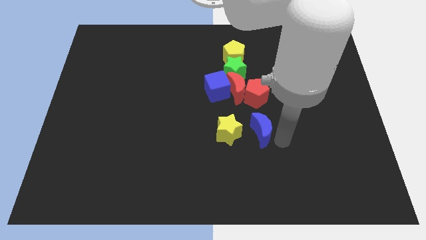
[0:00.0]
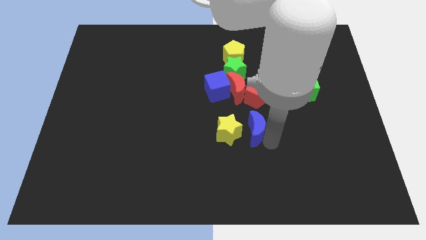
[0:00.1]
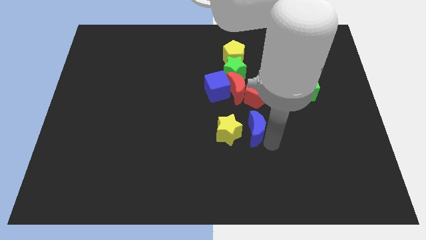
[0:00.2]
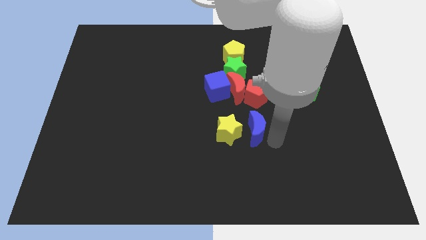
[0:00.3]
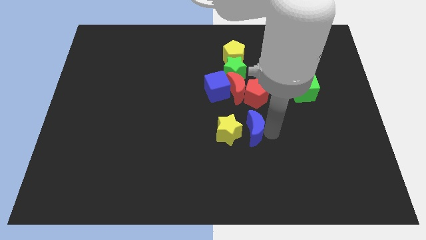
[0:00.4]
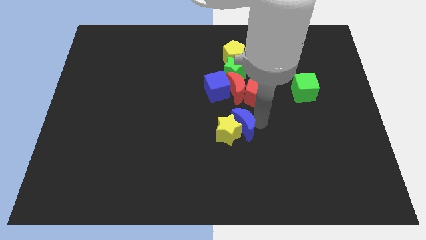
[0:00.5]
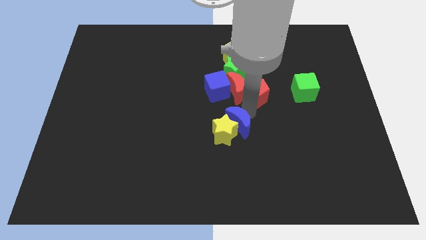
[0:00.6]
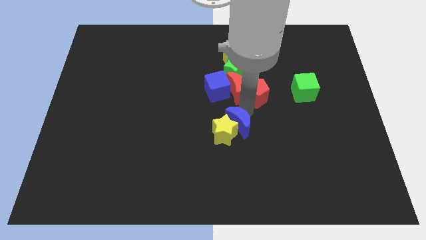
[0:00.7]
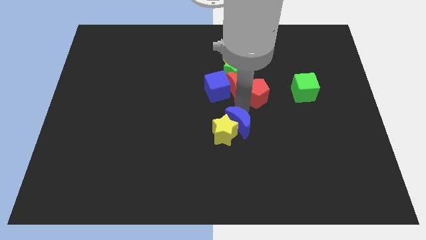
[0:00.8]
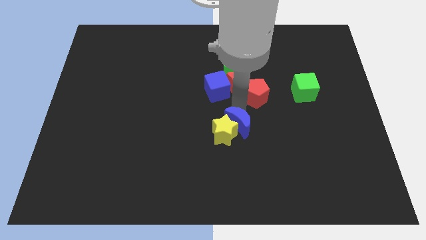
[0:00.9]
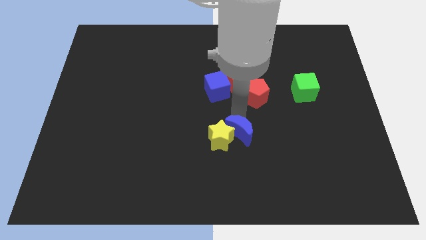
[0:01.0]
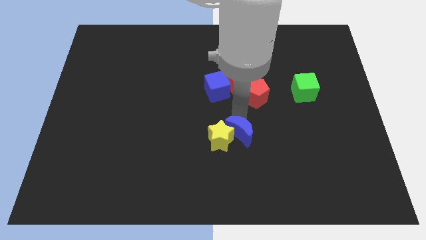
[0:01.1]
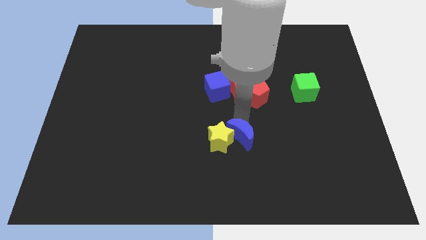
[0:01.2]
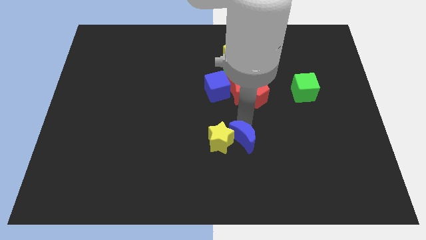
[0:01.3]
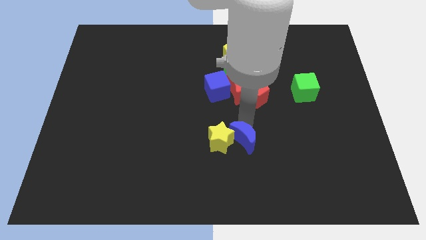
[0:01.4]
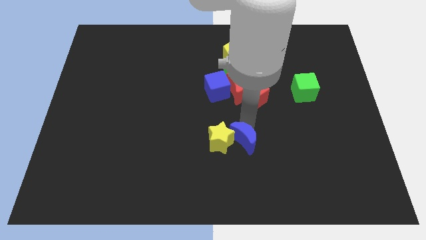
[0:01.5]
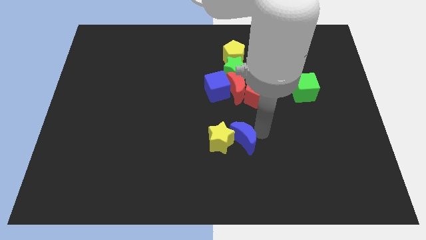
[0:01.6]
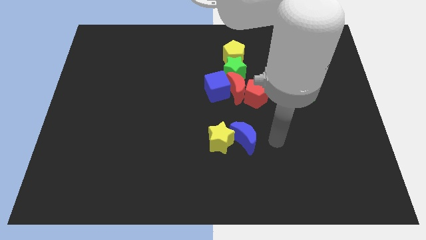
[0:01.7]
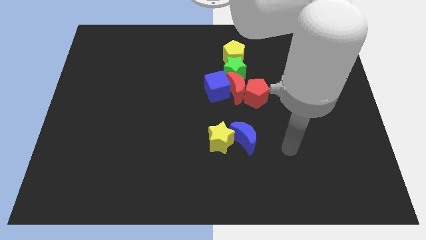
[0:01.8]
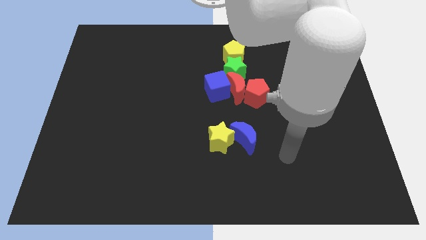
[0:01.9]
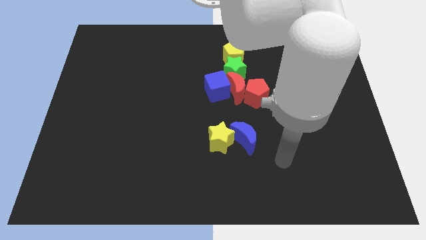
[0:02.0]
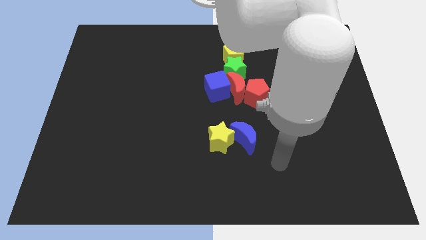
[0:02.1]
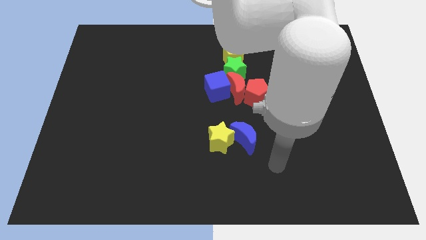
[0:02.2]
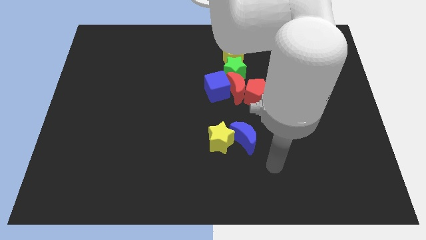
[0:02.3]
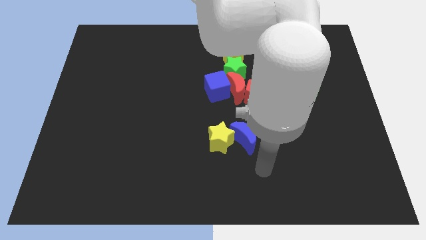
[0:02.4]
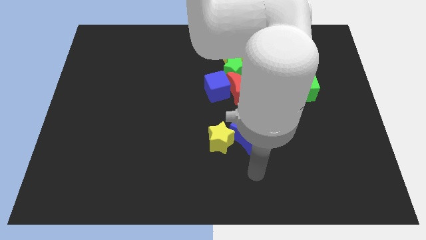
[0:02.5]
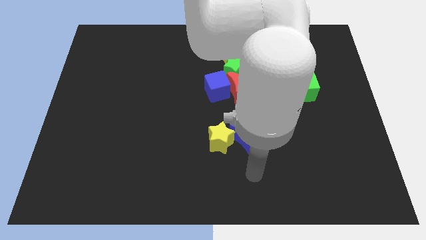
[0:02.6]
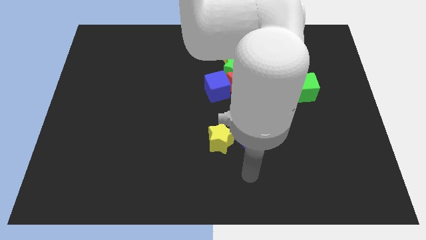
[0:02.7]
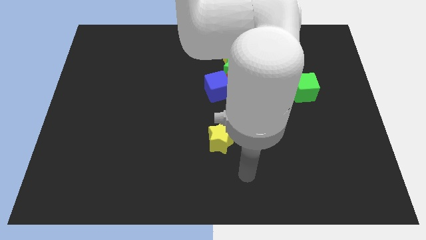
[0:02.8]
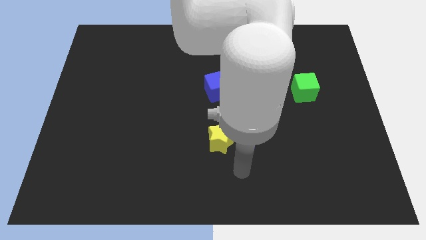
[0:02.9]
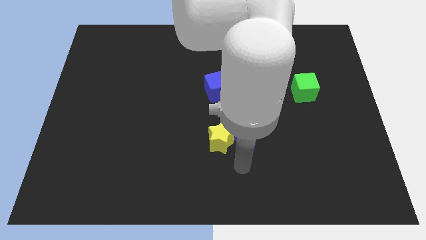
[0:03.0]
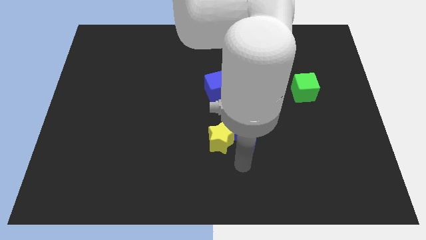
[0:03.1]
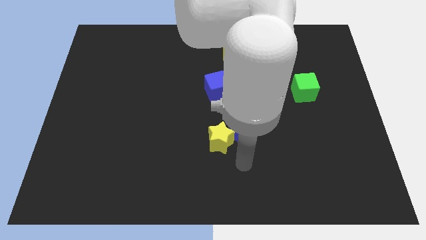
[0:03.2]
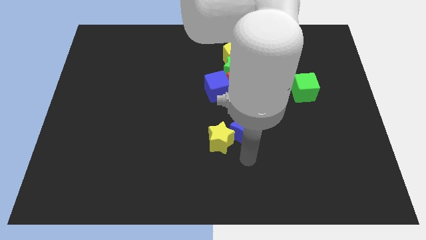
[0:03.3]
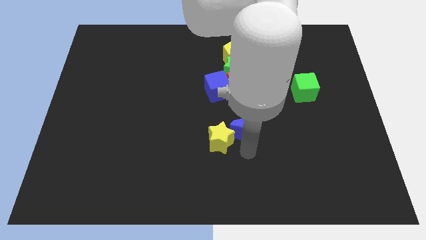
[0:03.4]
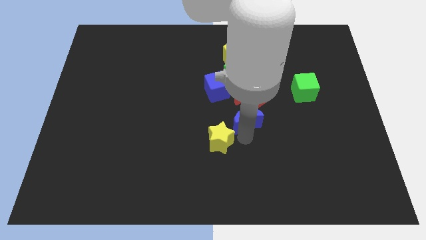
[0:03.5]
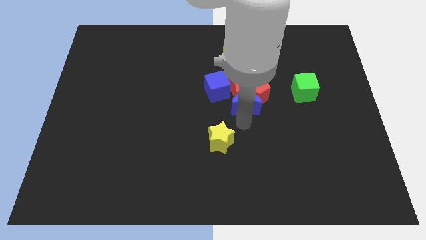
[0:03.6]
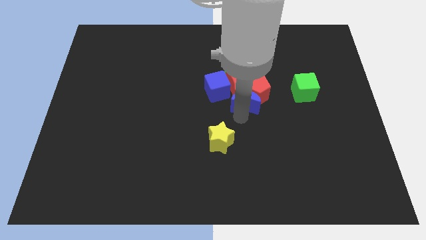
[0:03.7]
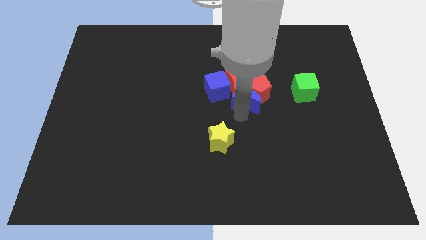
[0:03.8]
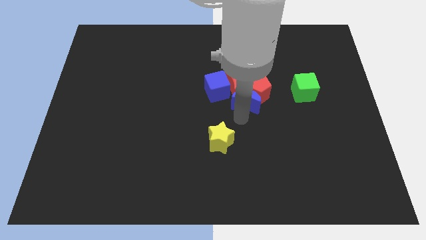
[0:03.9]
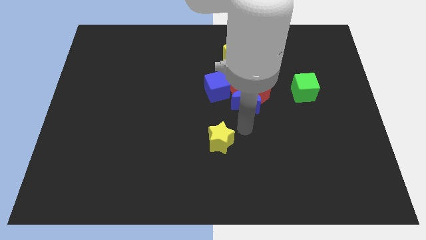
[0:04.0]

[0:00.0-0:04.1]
push the blue crescent into the red pentagon and red crescent

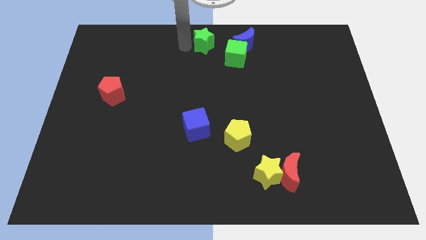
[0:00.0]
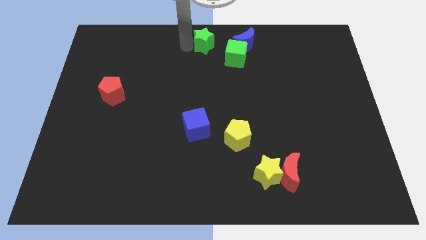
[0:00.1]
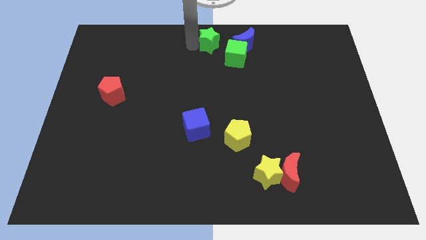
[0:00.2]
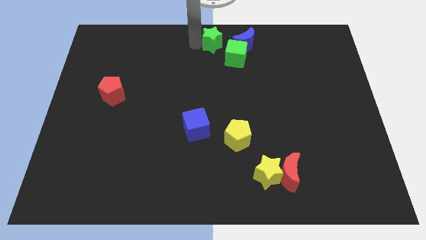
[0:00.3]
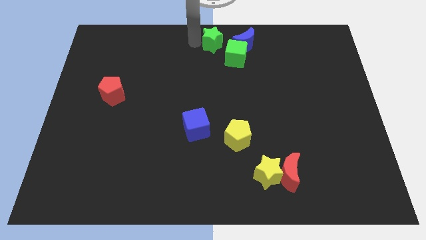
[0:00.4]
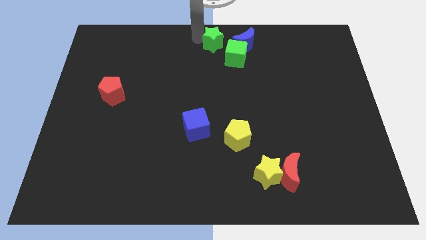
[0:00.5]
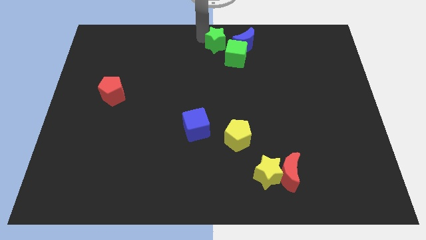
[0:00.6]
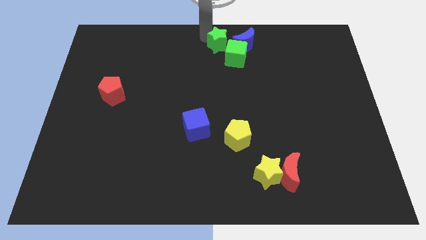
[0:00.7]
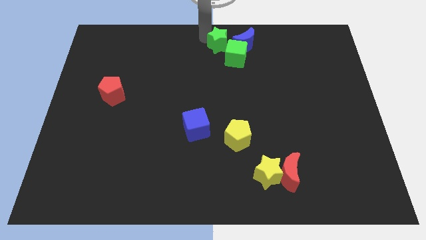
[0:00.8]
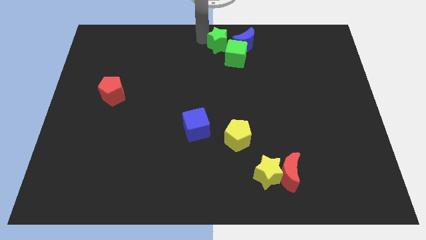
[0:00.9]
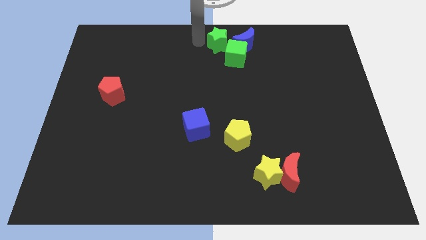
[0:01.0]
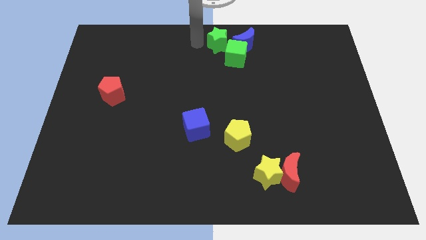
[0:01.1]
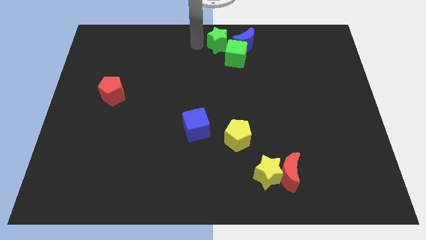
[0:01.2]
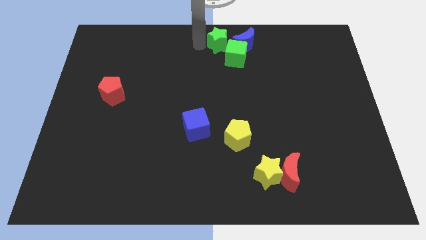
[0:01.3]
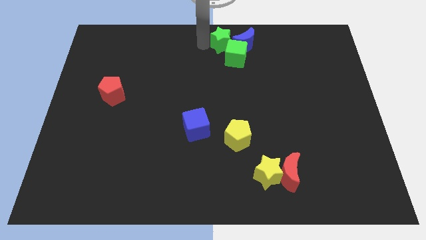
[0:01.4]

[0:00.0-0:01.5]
place the green star at the top left side of green cube

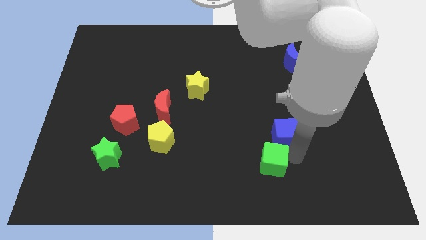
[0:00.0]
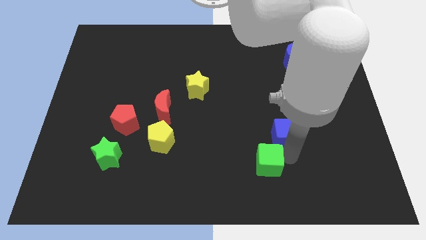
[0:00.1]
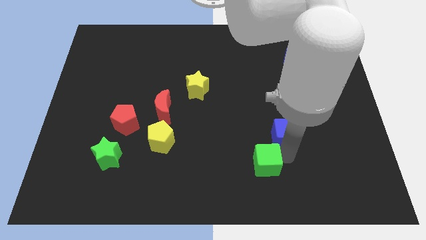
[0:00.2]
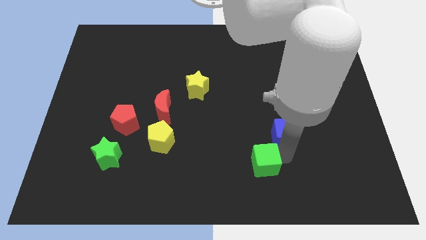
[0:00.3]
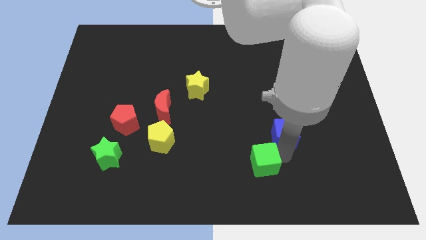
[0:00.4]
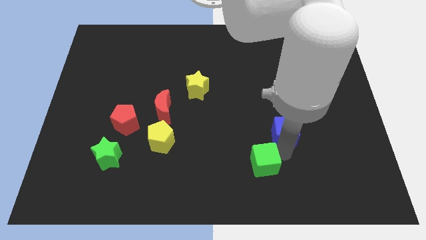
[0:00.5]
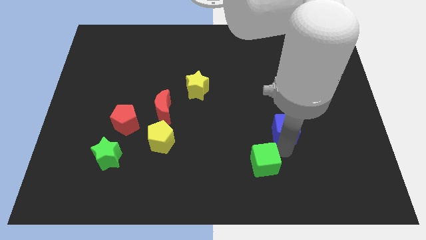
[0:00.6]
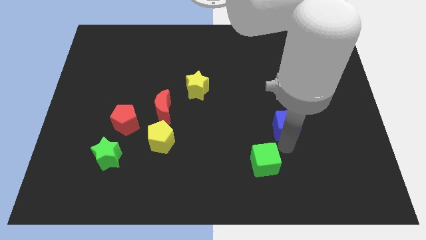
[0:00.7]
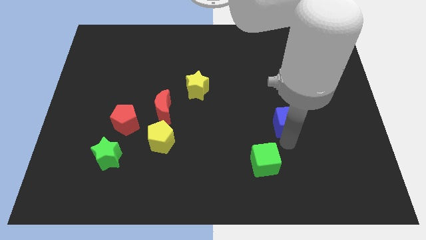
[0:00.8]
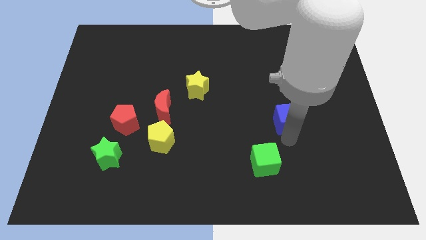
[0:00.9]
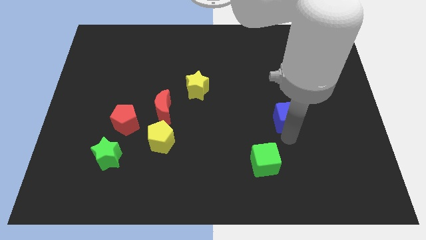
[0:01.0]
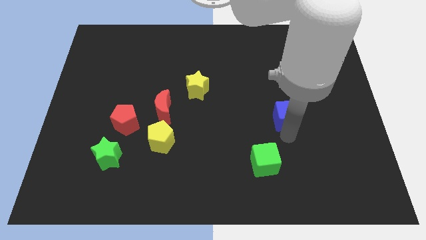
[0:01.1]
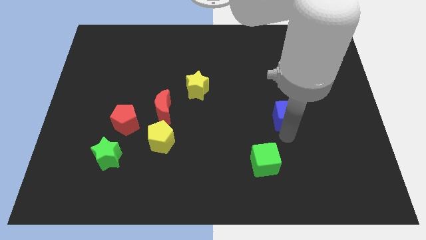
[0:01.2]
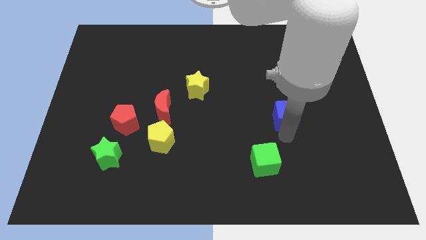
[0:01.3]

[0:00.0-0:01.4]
slide the blue cube slightly upwards

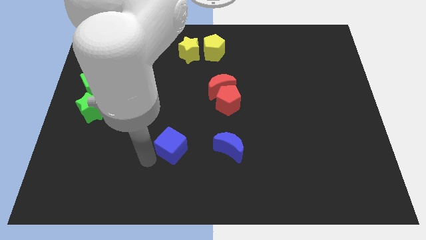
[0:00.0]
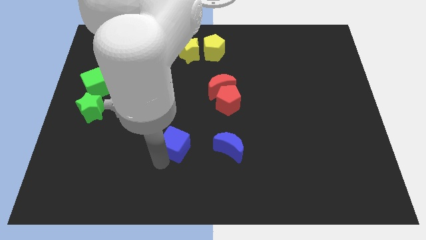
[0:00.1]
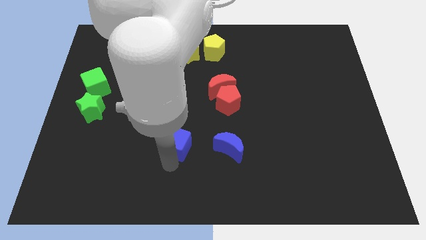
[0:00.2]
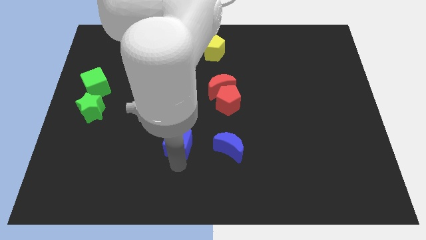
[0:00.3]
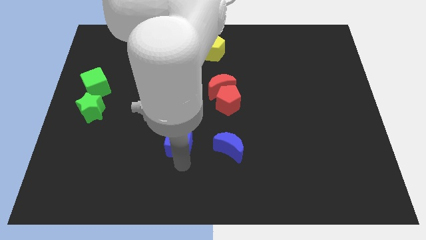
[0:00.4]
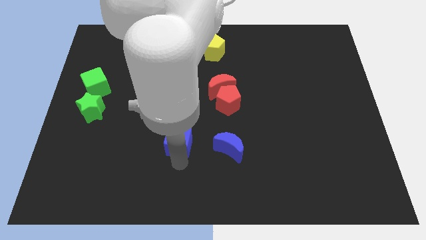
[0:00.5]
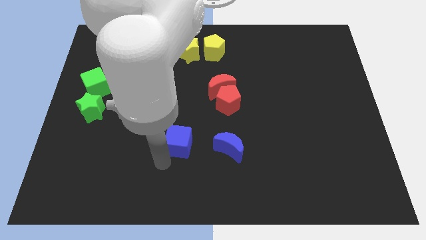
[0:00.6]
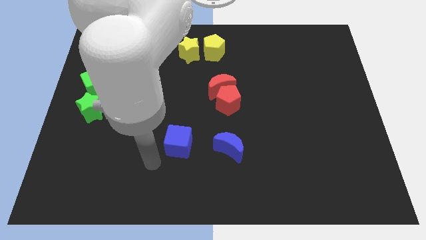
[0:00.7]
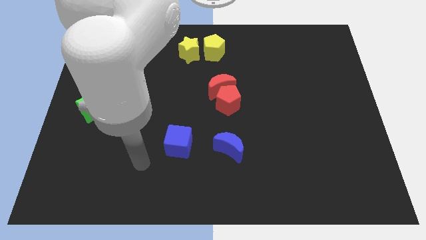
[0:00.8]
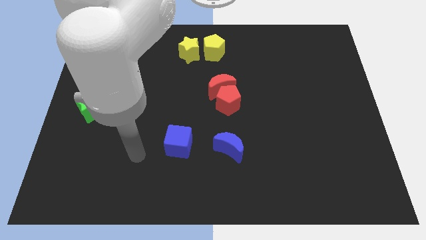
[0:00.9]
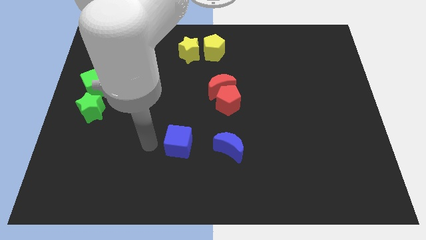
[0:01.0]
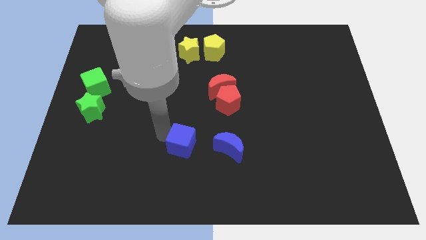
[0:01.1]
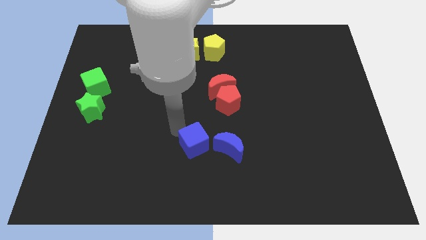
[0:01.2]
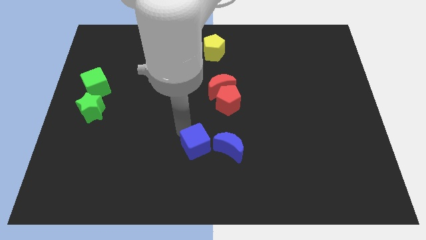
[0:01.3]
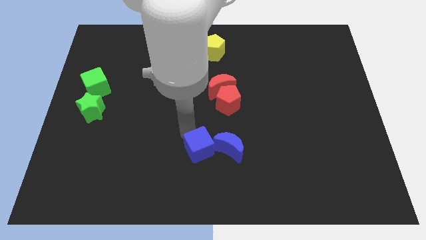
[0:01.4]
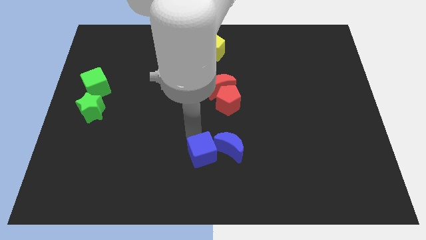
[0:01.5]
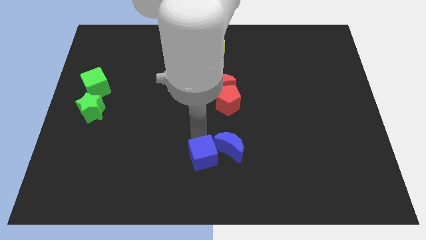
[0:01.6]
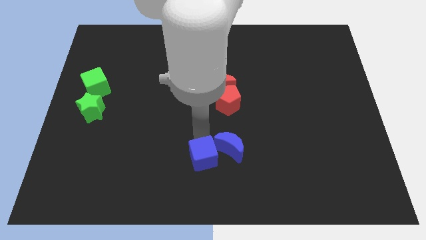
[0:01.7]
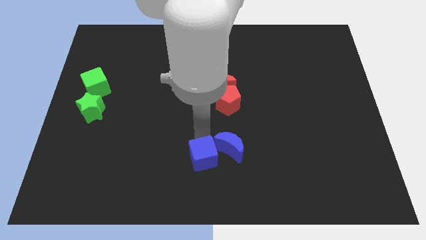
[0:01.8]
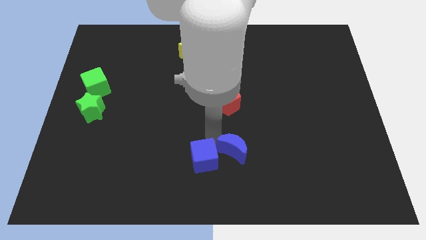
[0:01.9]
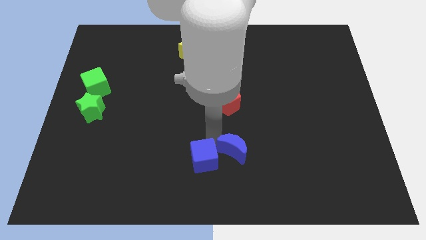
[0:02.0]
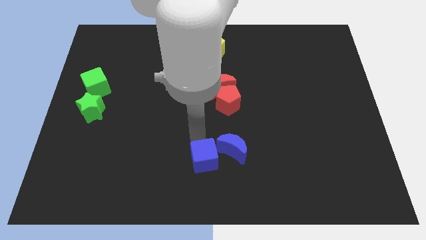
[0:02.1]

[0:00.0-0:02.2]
move the blue cube into blue moon
